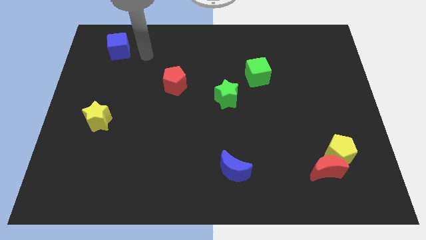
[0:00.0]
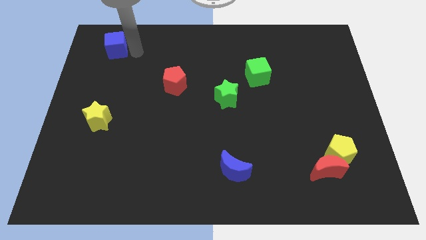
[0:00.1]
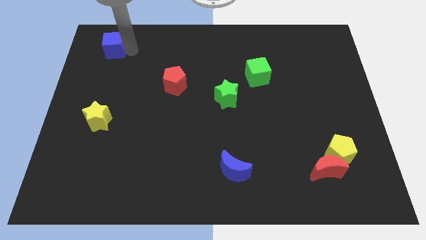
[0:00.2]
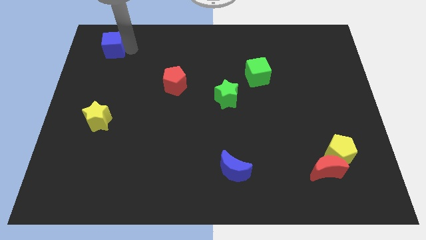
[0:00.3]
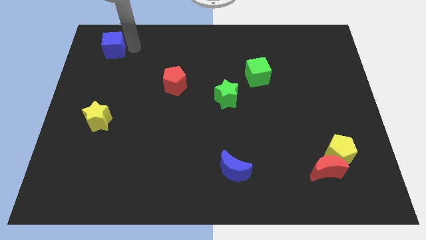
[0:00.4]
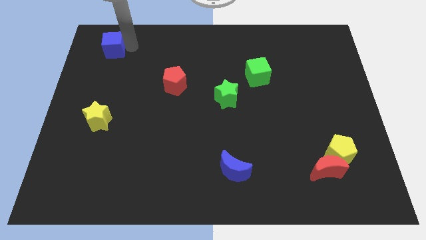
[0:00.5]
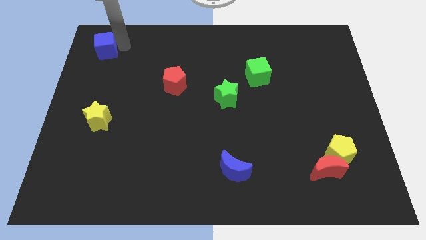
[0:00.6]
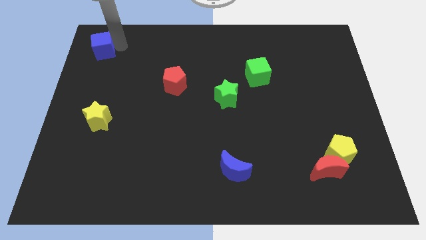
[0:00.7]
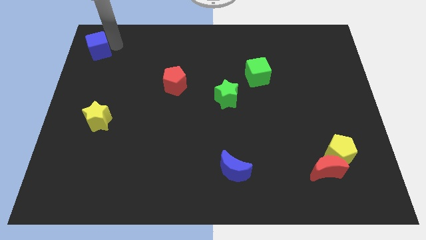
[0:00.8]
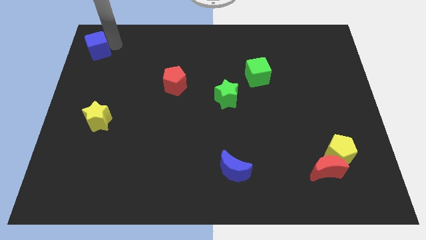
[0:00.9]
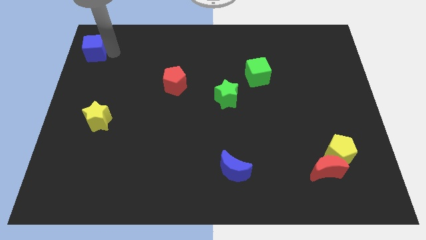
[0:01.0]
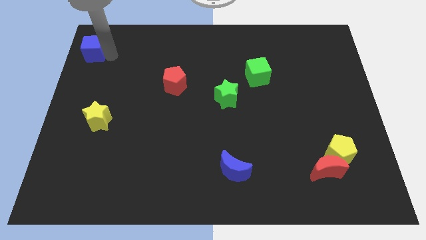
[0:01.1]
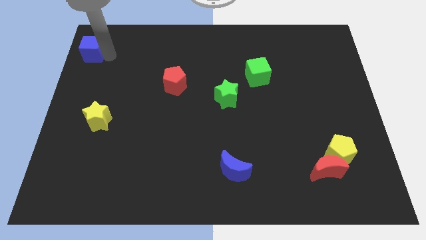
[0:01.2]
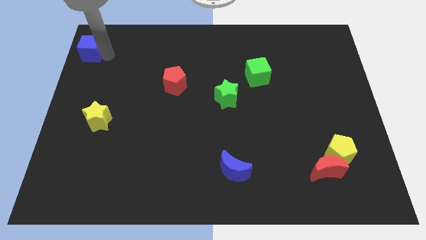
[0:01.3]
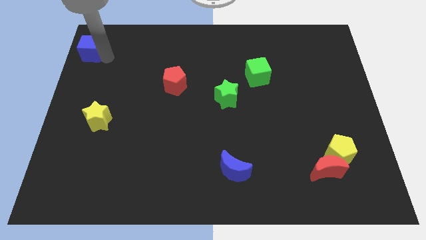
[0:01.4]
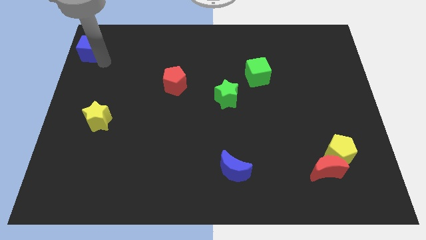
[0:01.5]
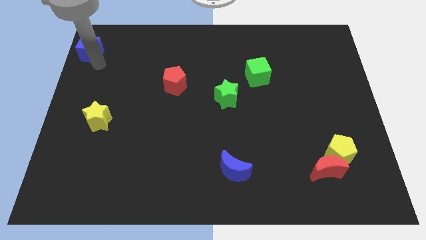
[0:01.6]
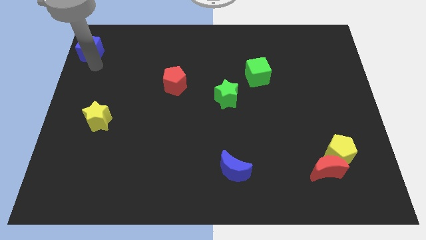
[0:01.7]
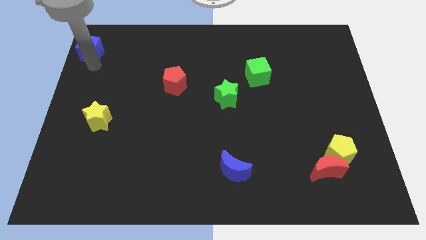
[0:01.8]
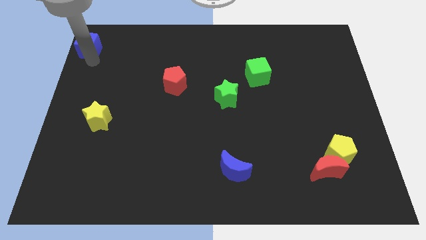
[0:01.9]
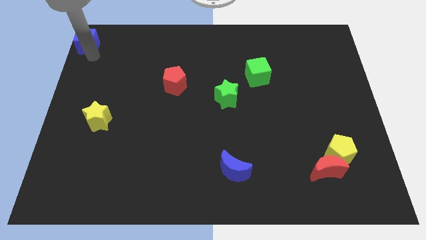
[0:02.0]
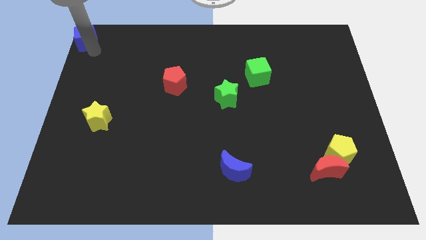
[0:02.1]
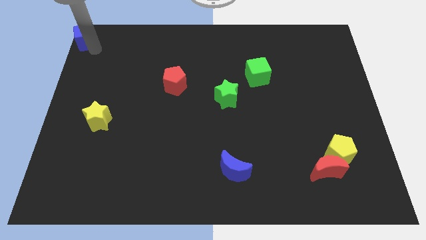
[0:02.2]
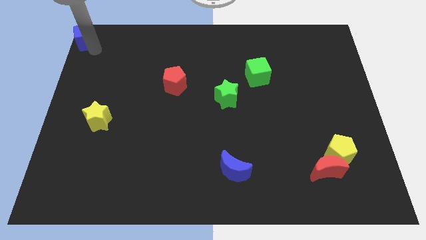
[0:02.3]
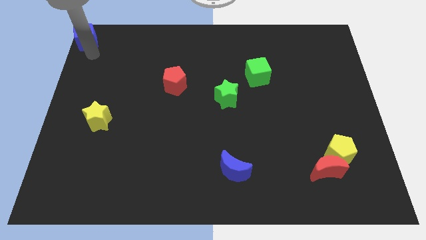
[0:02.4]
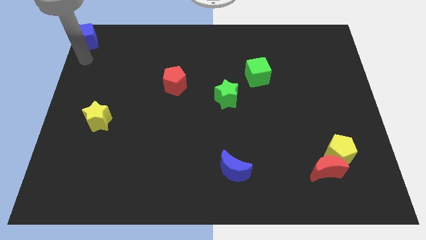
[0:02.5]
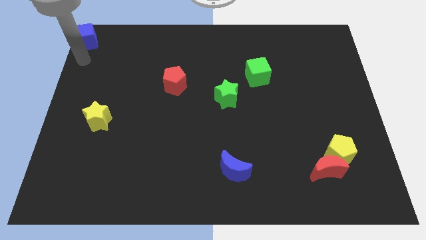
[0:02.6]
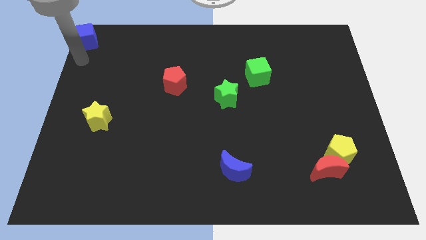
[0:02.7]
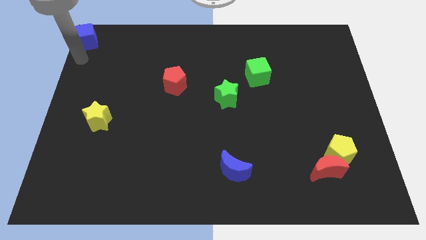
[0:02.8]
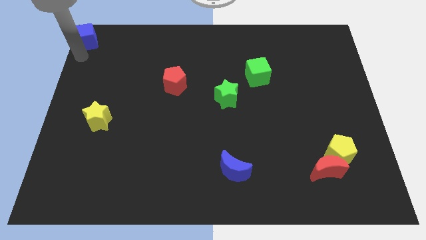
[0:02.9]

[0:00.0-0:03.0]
push blue cube to the top left corner of the board

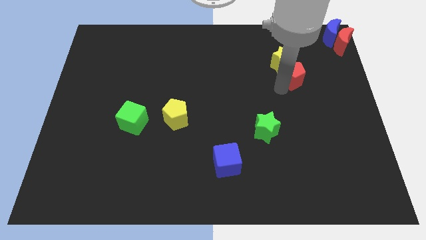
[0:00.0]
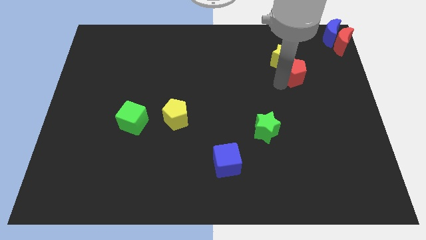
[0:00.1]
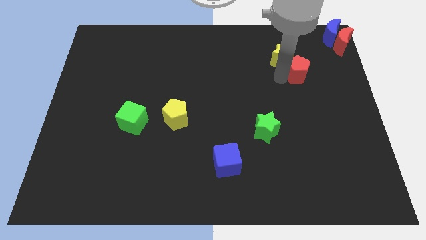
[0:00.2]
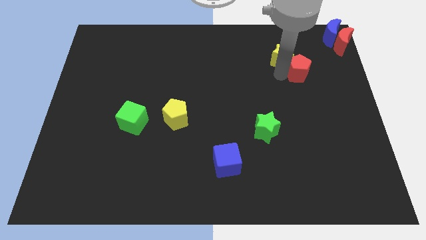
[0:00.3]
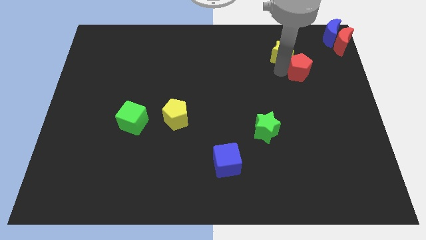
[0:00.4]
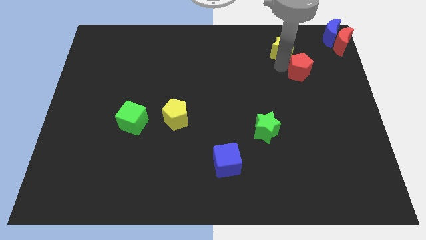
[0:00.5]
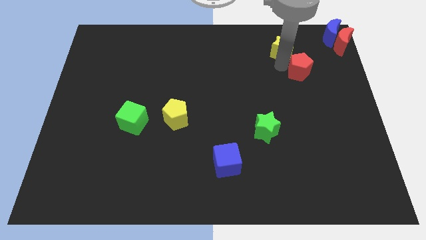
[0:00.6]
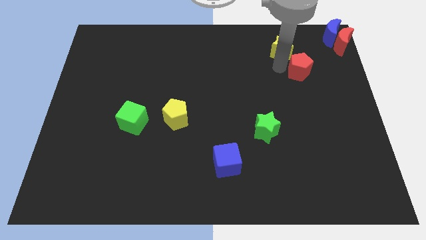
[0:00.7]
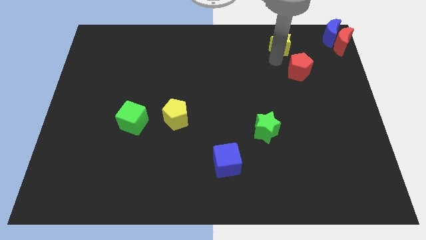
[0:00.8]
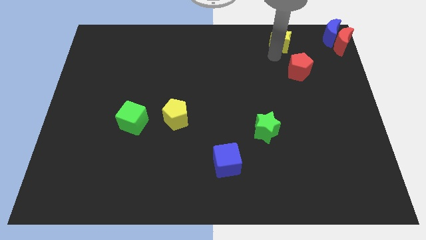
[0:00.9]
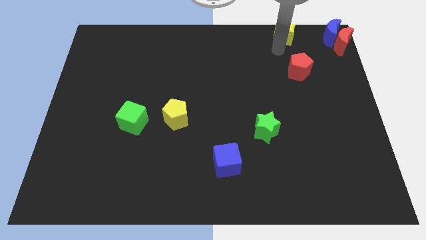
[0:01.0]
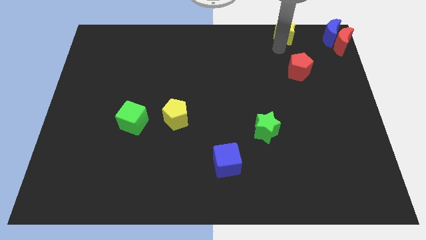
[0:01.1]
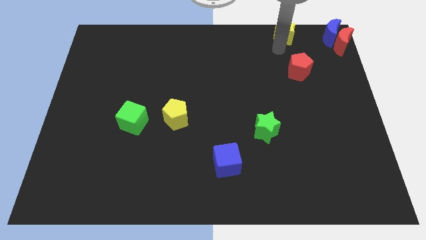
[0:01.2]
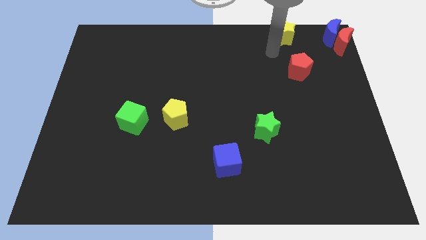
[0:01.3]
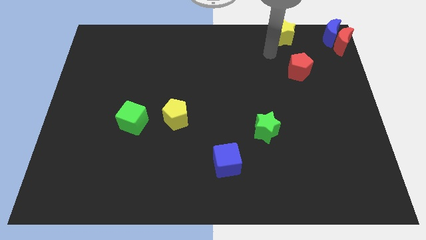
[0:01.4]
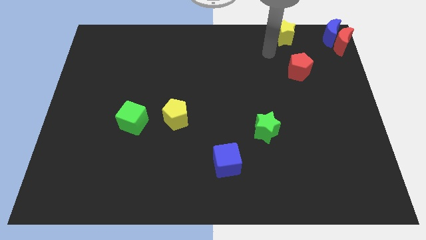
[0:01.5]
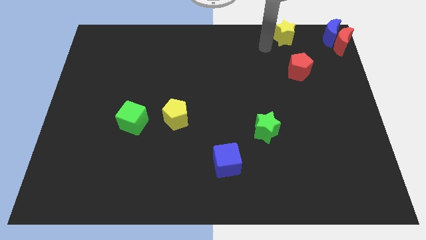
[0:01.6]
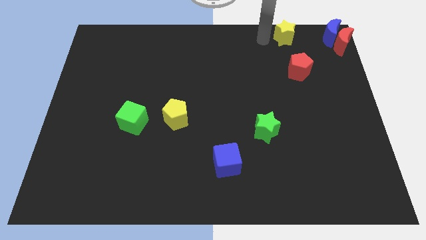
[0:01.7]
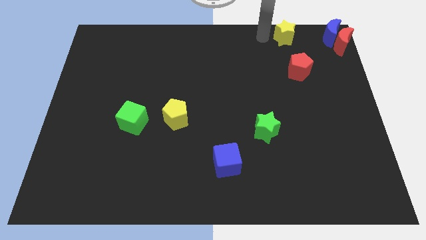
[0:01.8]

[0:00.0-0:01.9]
separate the yellow star from red pentagon to top

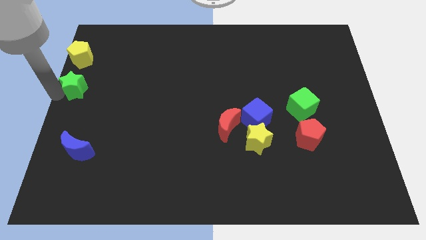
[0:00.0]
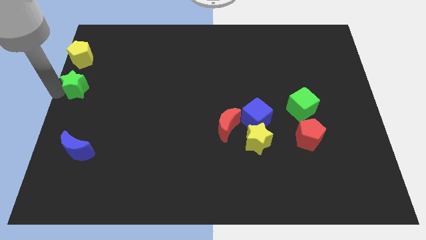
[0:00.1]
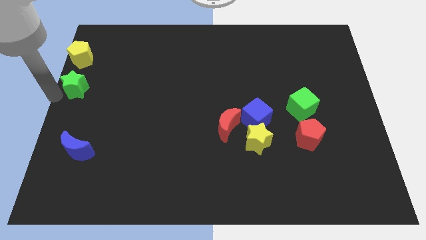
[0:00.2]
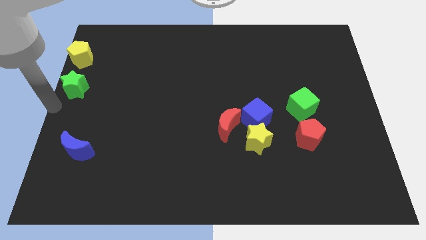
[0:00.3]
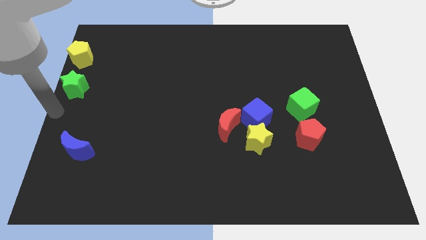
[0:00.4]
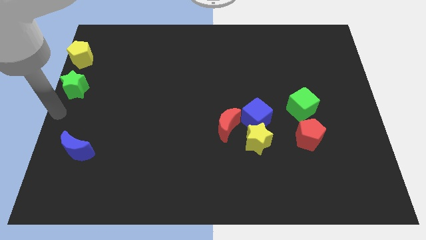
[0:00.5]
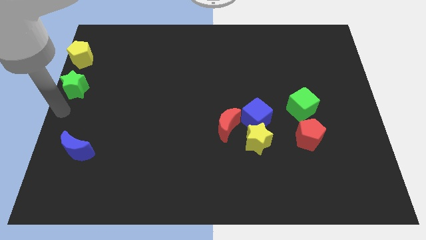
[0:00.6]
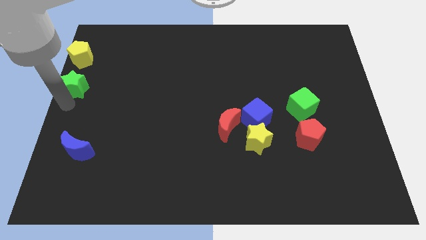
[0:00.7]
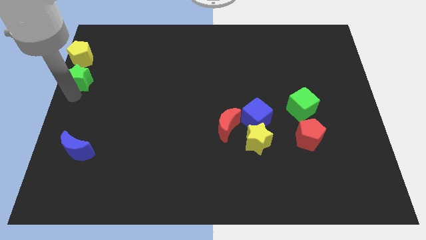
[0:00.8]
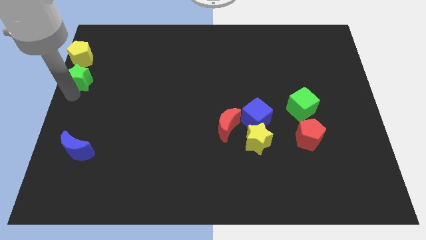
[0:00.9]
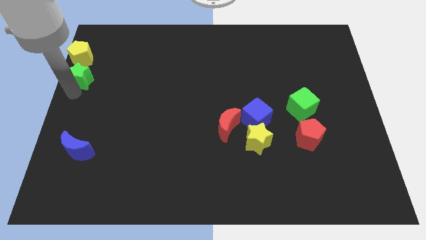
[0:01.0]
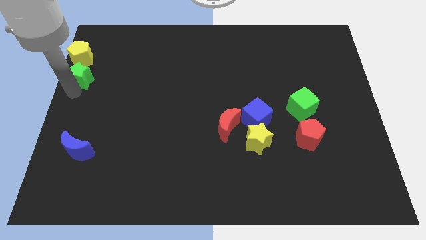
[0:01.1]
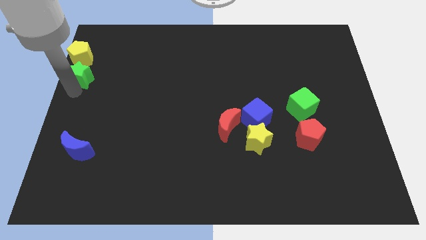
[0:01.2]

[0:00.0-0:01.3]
slightly drag green star towards yellow pentagon

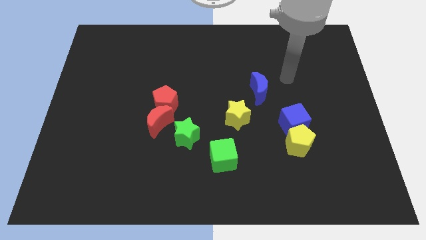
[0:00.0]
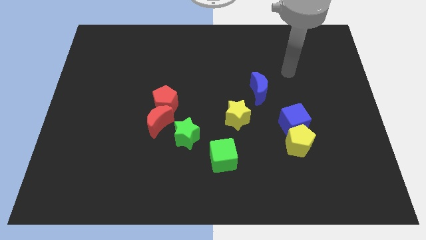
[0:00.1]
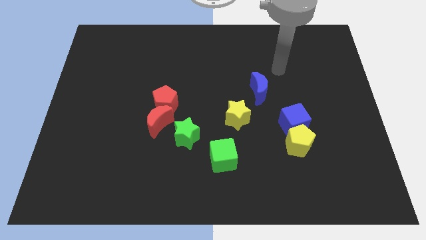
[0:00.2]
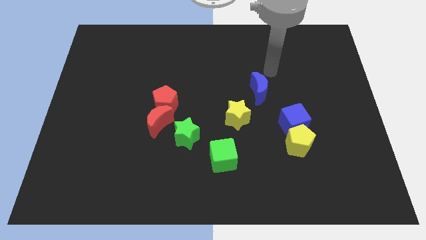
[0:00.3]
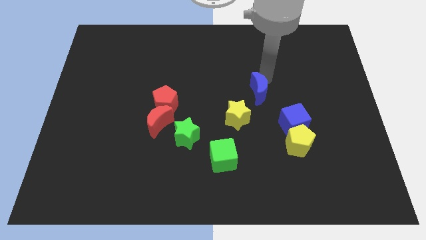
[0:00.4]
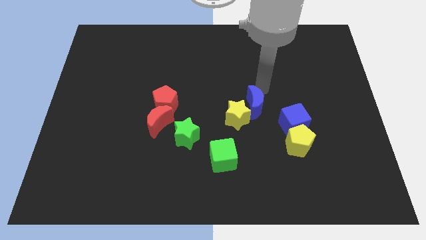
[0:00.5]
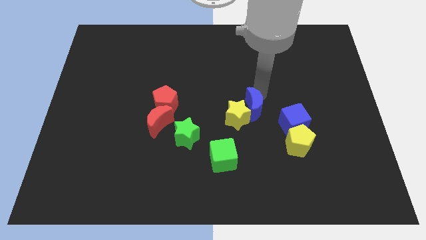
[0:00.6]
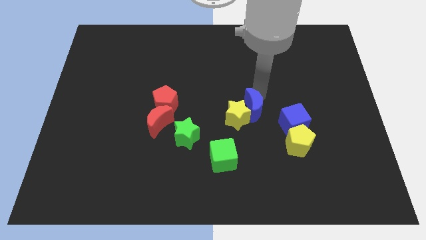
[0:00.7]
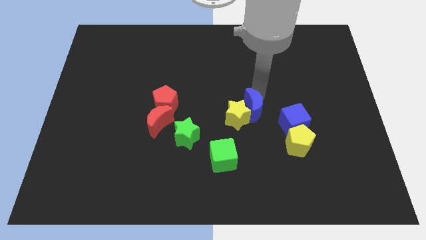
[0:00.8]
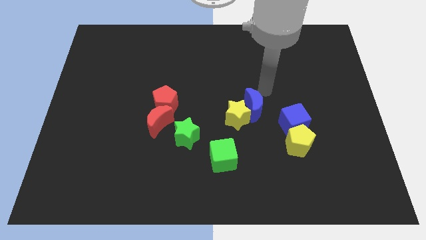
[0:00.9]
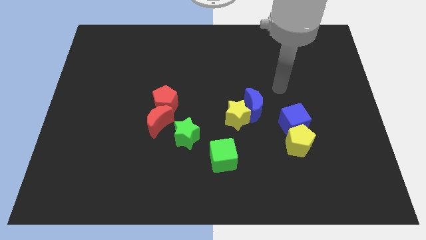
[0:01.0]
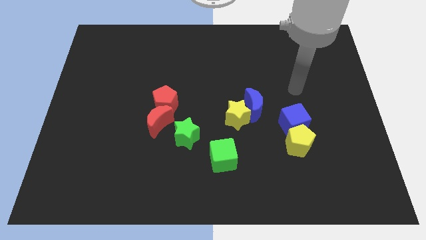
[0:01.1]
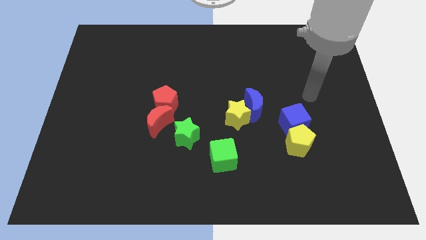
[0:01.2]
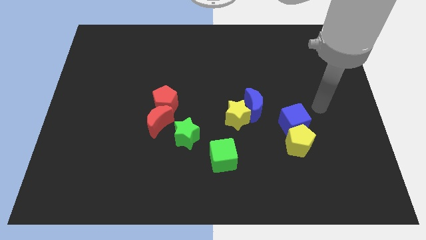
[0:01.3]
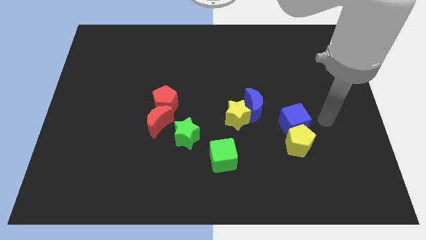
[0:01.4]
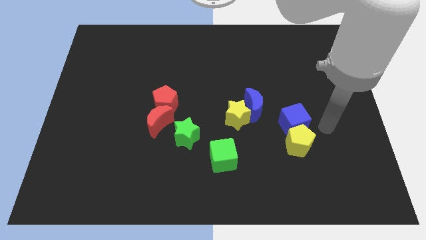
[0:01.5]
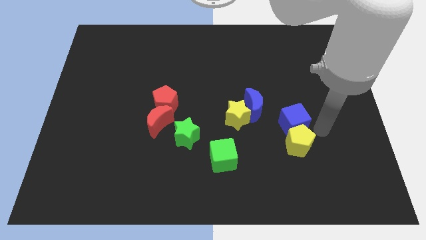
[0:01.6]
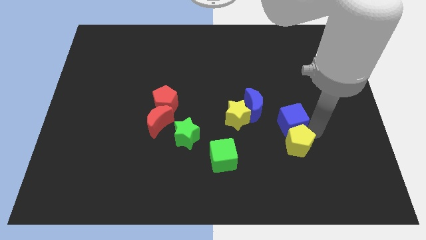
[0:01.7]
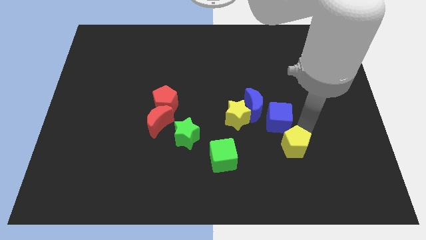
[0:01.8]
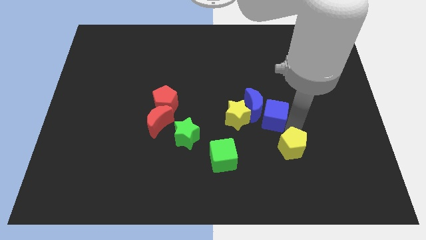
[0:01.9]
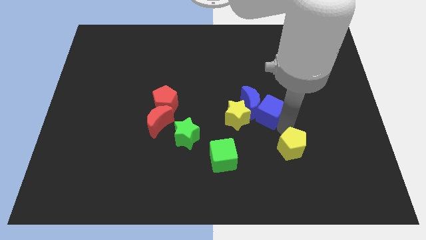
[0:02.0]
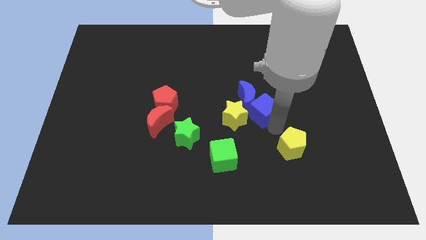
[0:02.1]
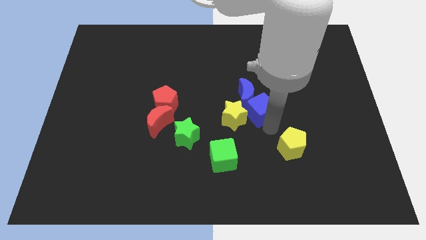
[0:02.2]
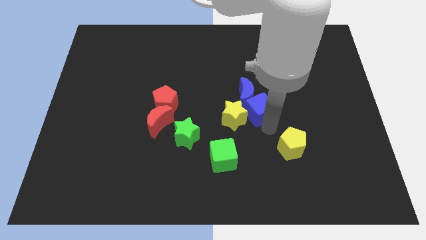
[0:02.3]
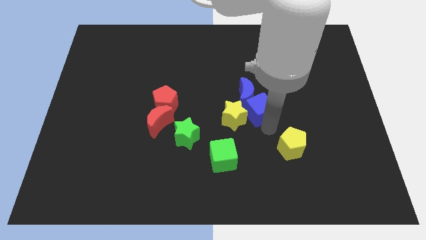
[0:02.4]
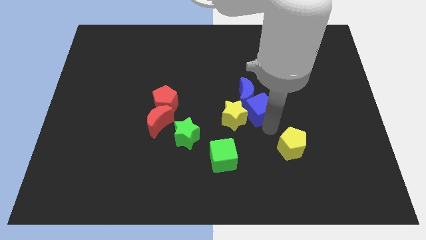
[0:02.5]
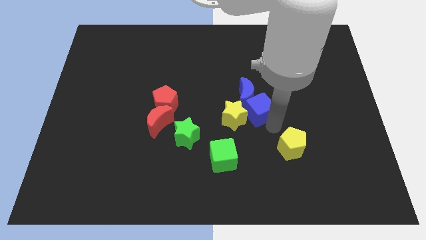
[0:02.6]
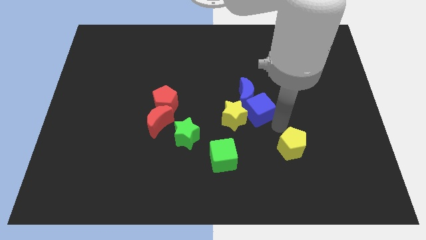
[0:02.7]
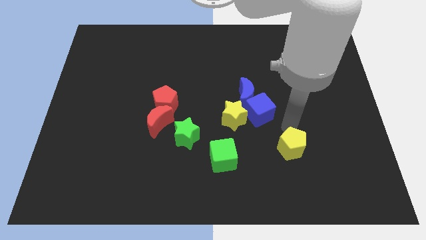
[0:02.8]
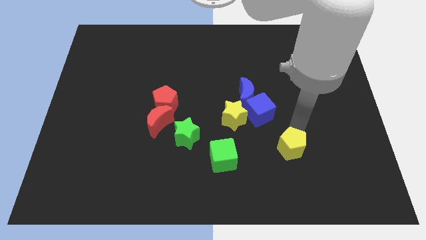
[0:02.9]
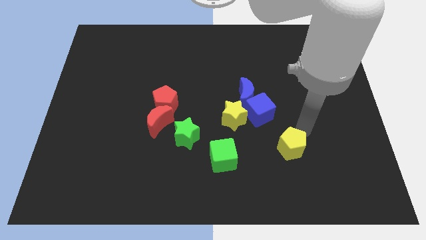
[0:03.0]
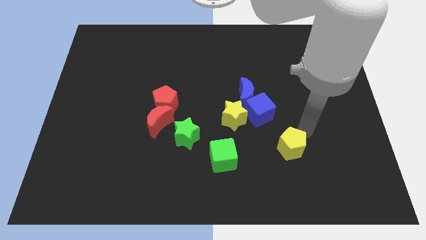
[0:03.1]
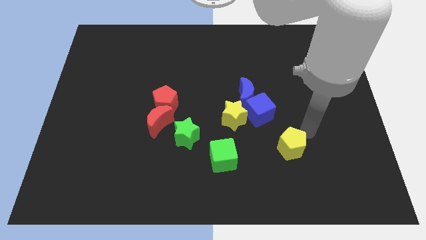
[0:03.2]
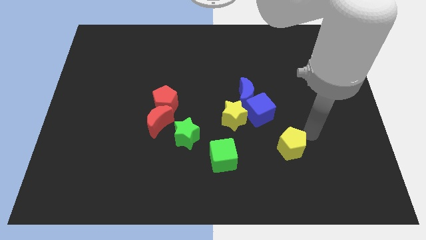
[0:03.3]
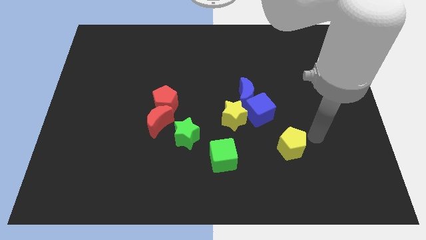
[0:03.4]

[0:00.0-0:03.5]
push the blue cube into the bottom side of the blue crescent
